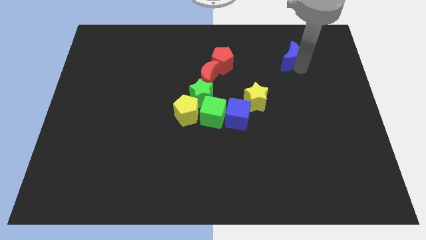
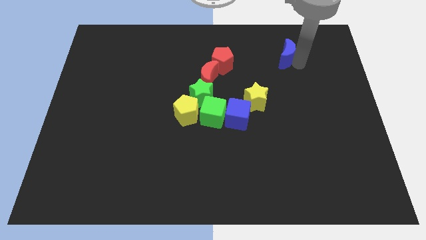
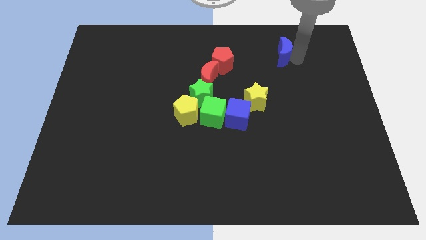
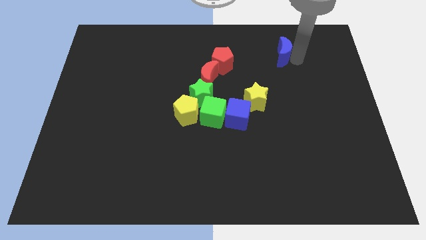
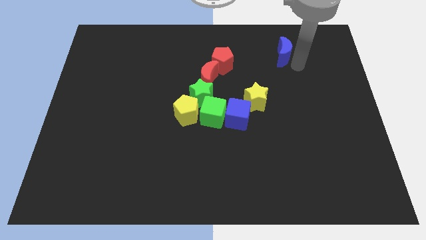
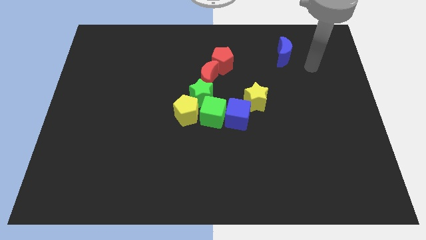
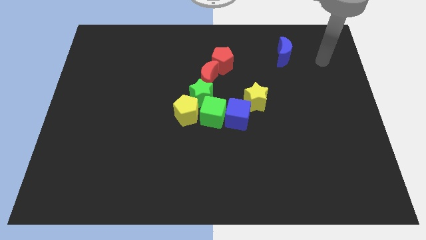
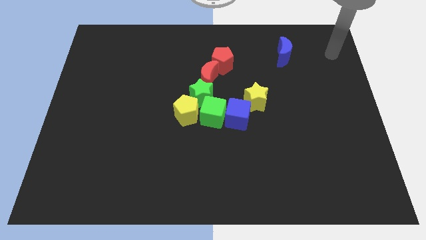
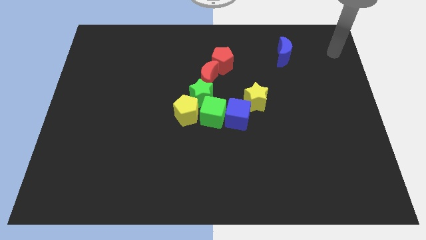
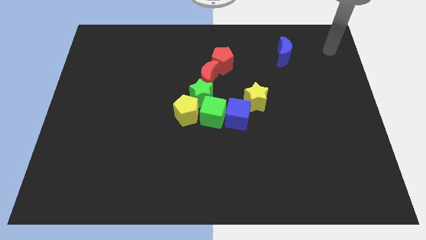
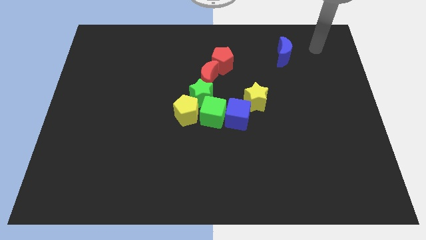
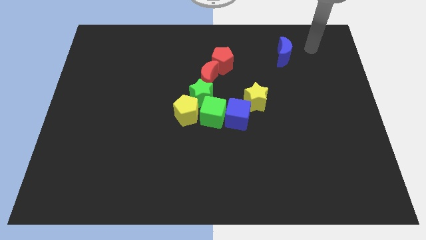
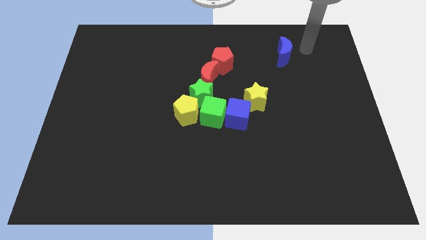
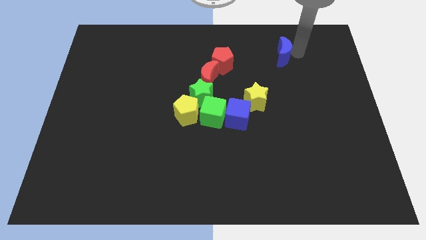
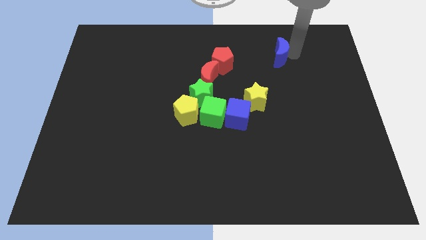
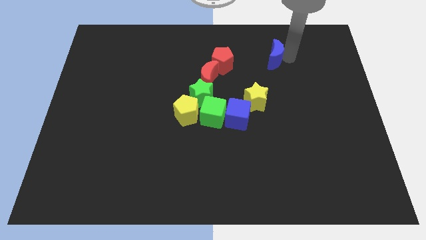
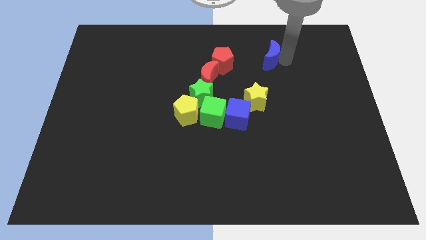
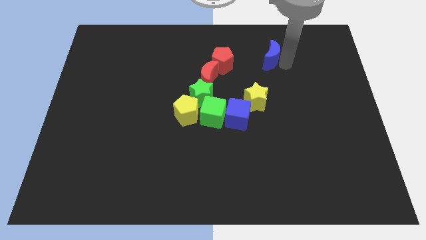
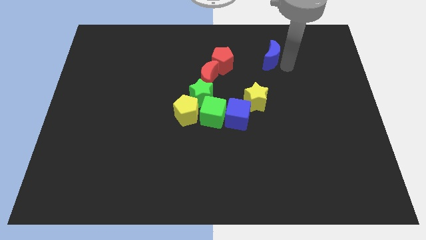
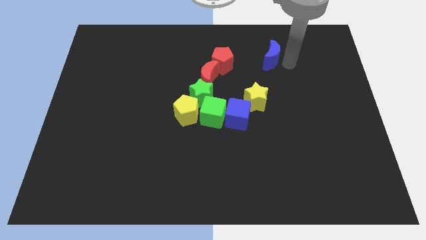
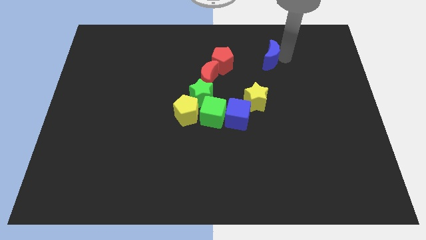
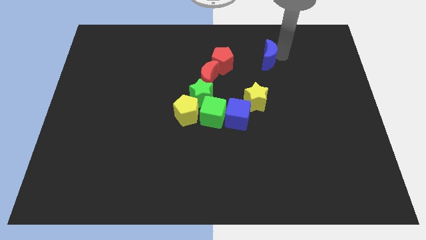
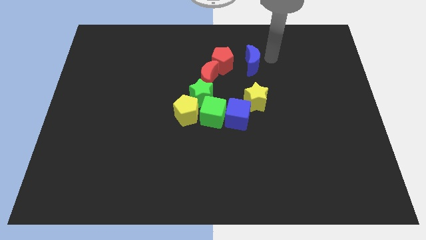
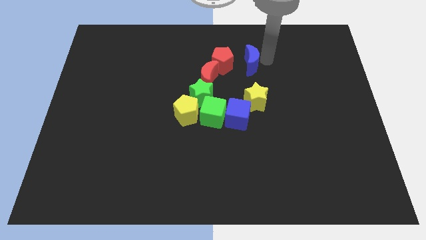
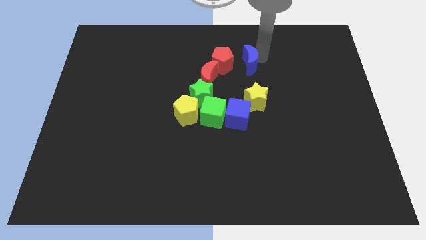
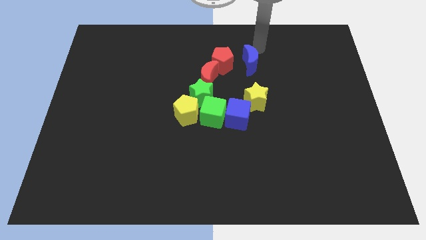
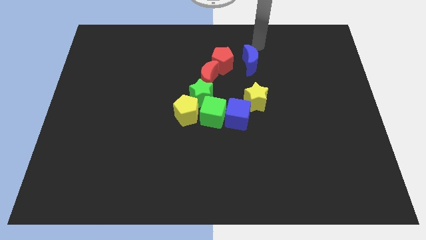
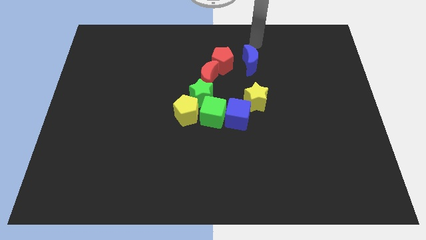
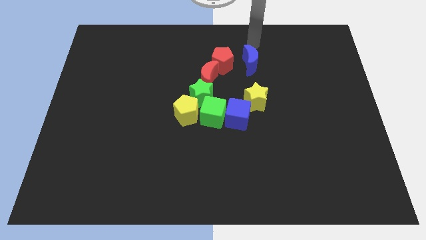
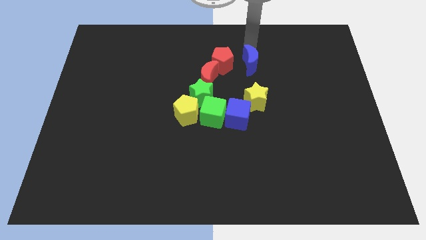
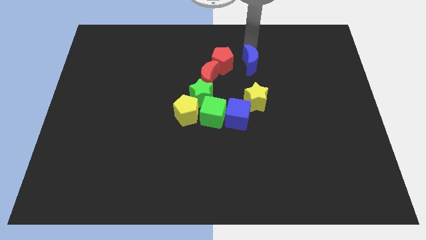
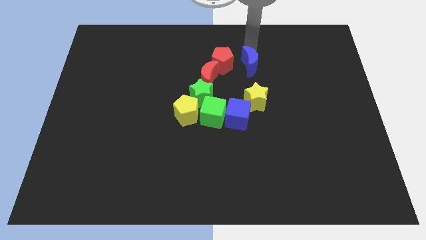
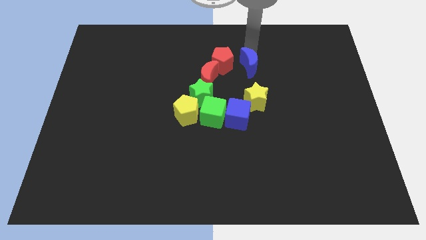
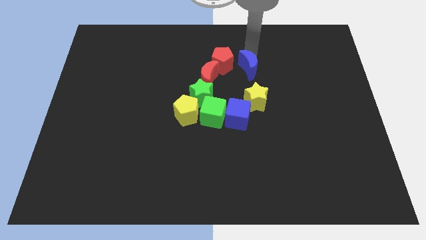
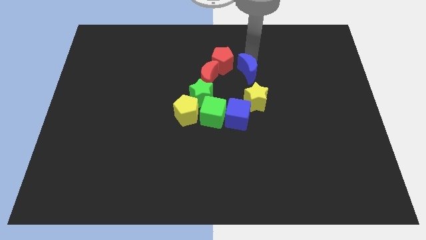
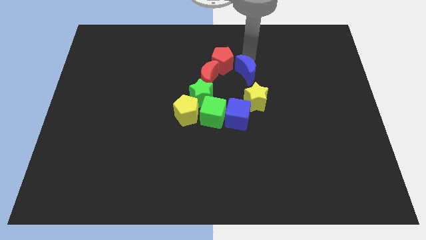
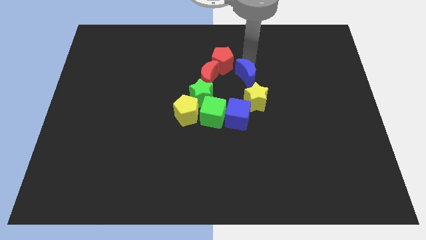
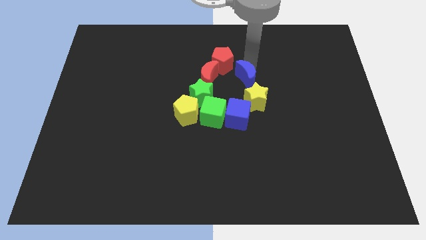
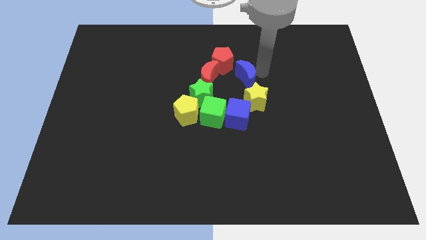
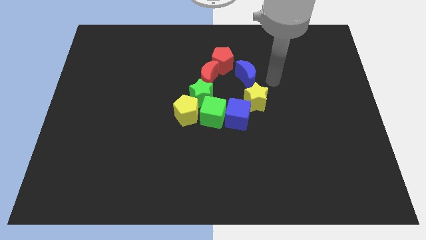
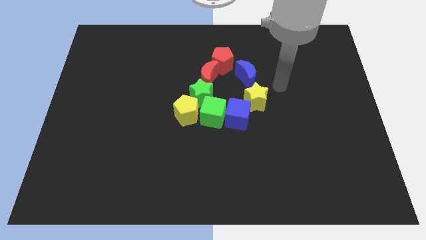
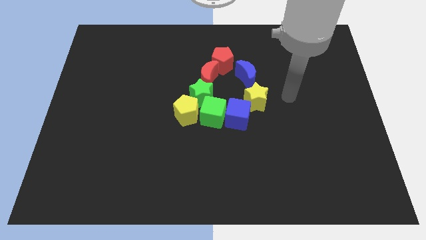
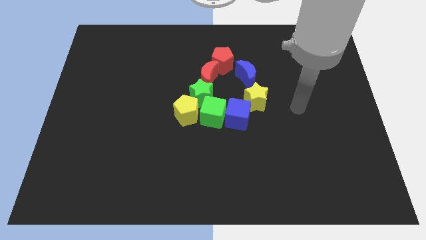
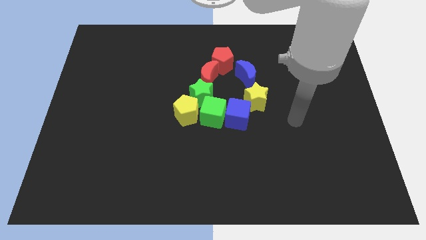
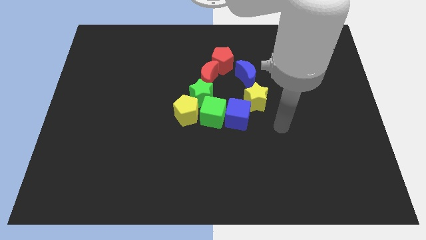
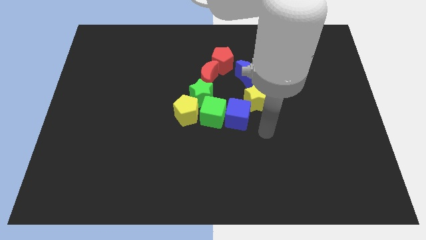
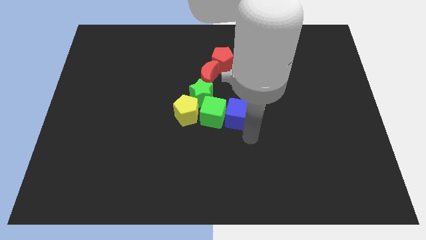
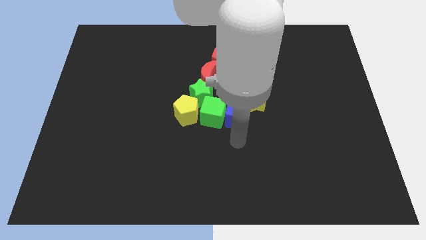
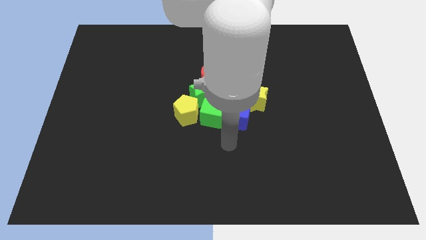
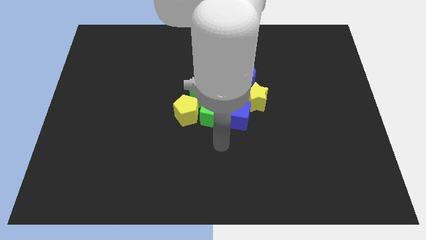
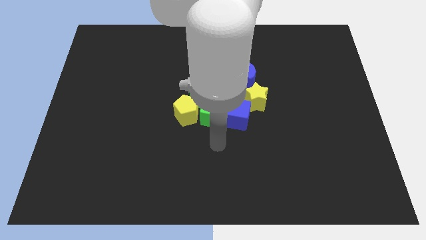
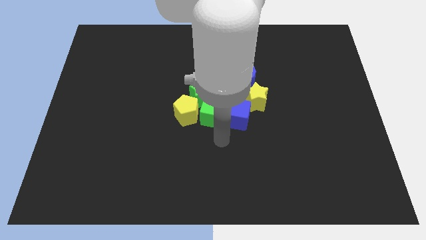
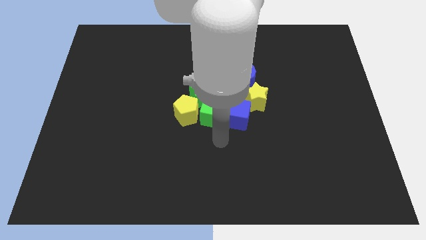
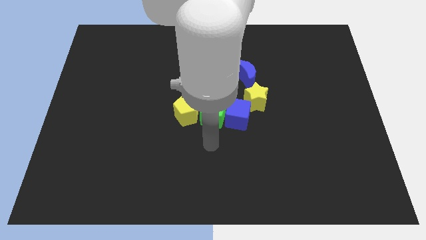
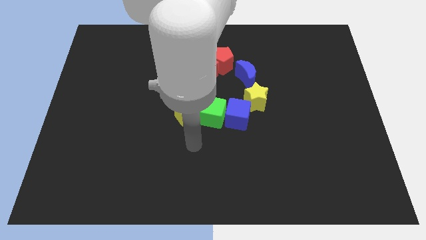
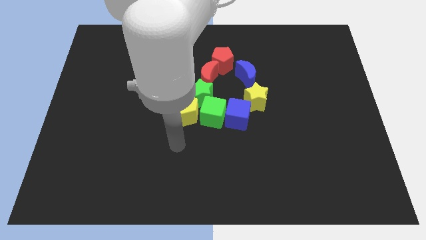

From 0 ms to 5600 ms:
place the blue crescent on top of the yellow star

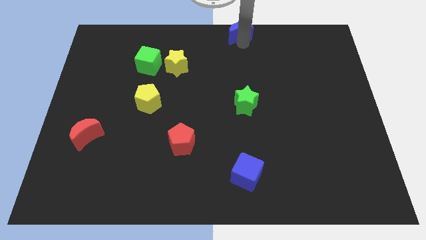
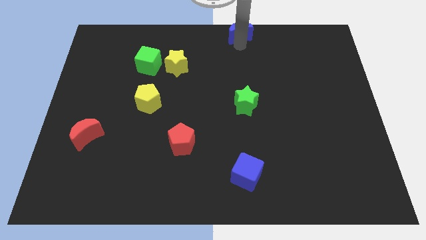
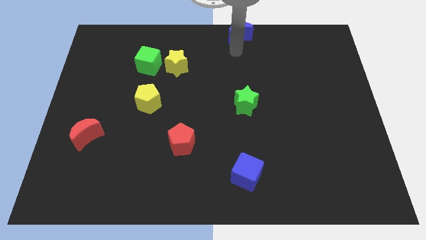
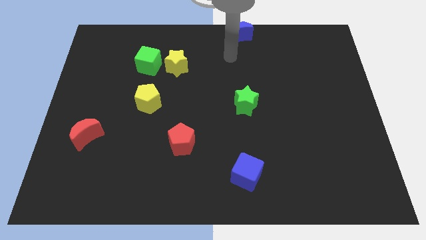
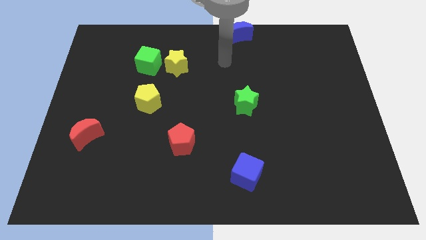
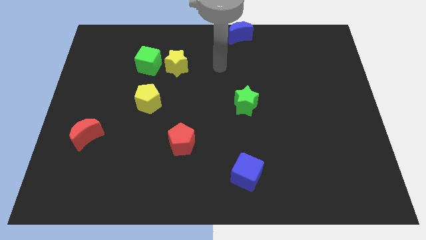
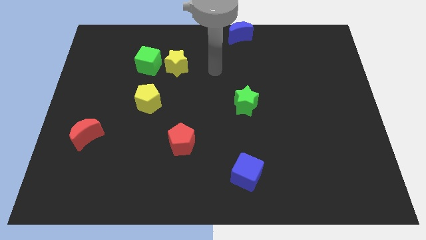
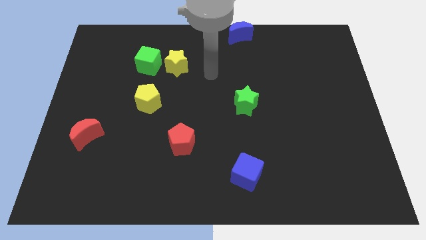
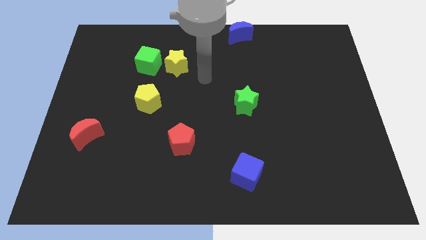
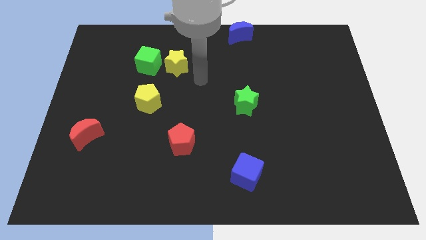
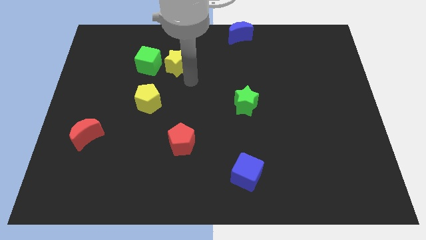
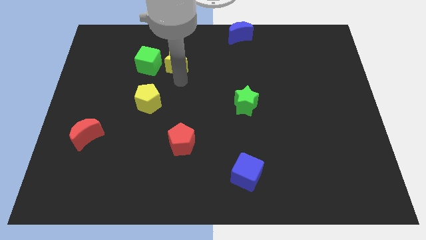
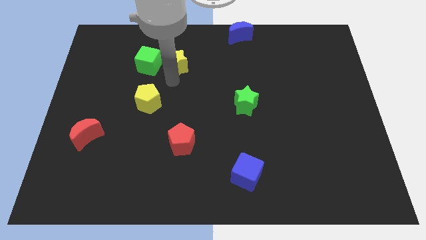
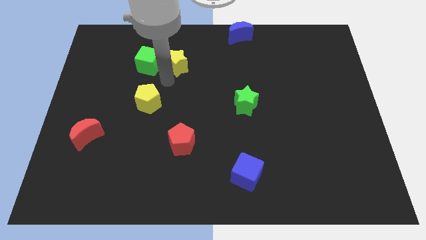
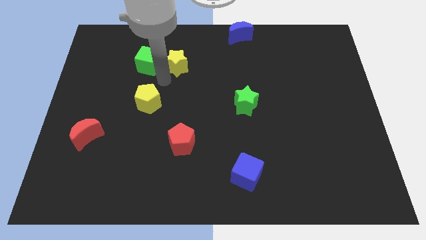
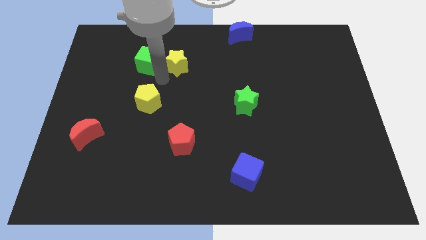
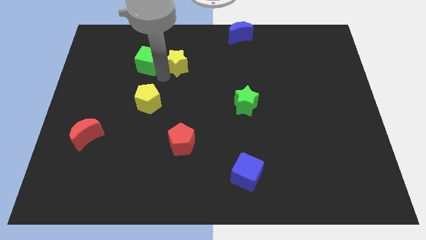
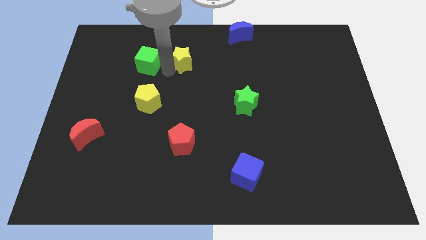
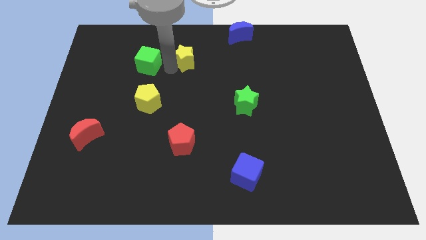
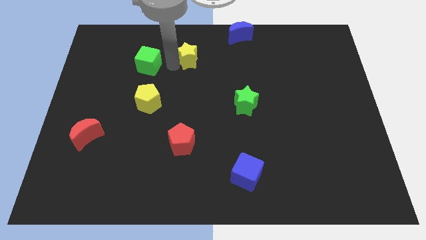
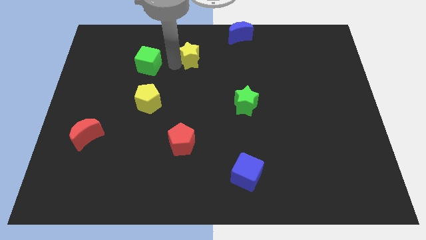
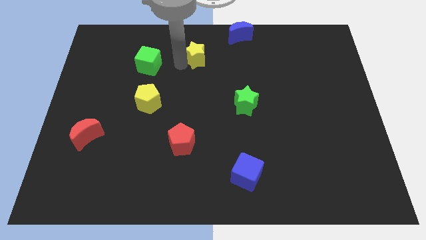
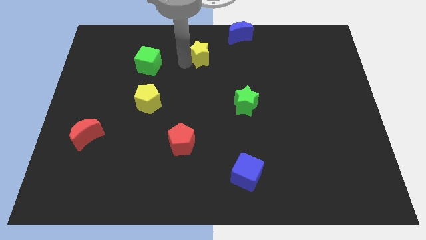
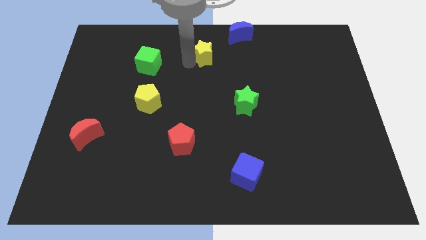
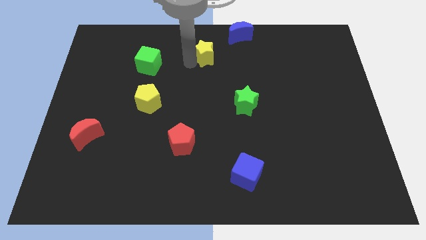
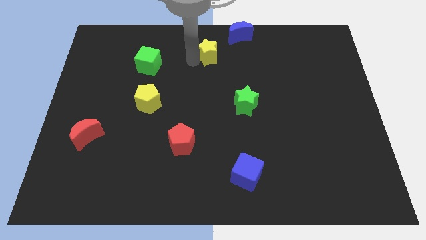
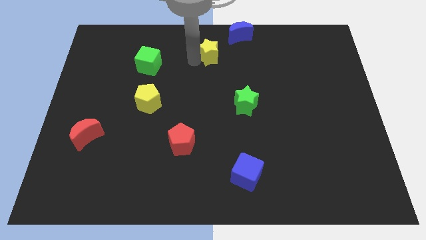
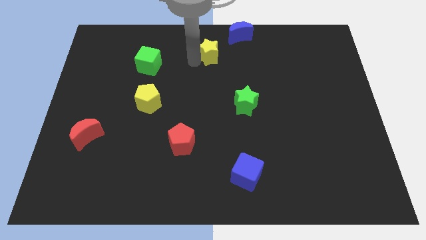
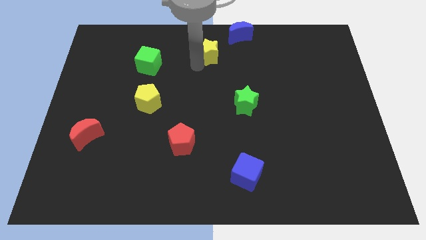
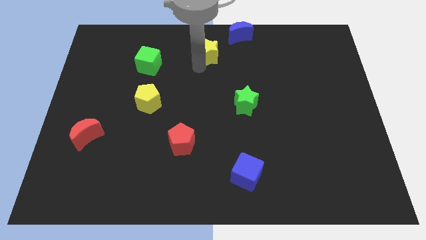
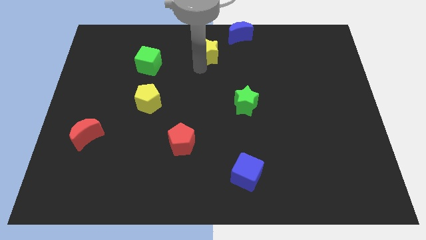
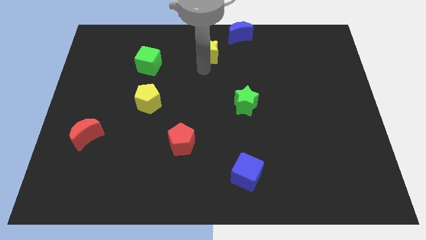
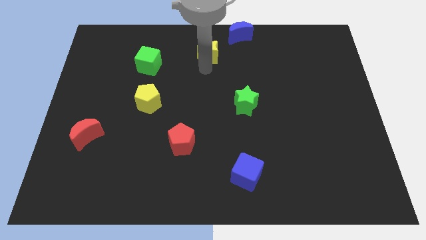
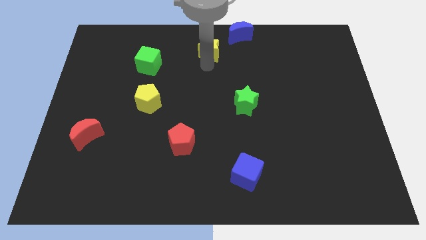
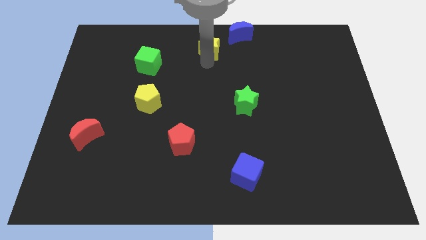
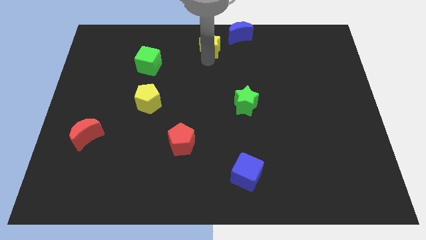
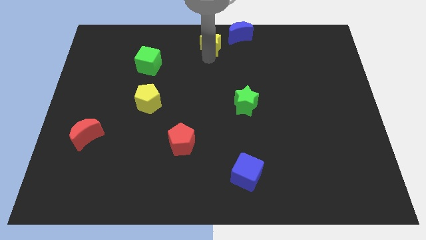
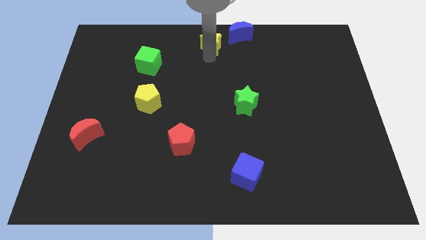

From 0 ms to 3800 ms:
move the yellow star to the top center of the board
